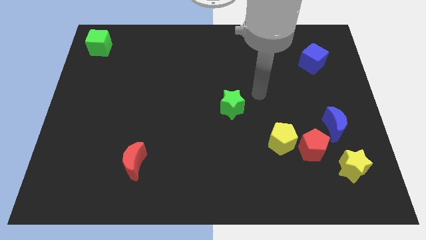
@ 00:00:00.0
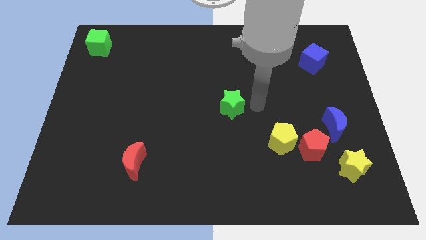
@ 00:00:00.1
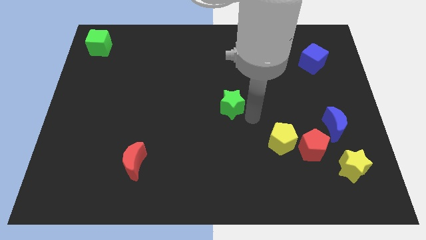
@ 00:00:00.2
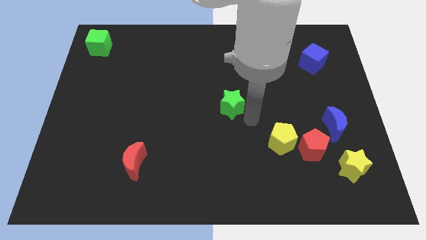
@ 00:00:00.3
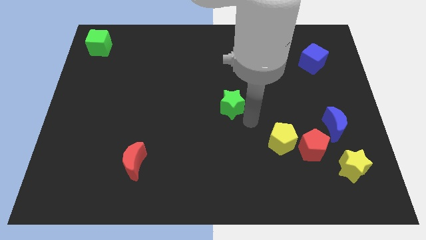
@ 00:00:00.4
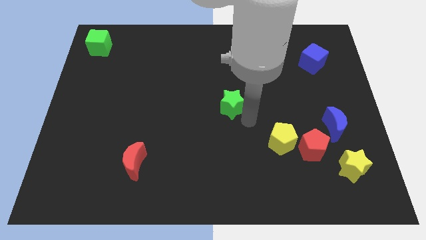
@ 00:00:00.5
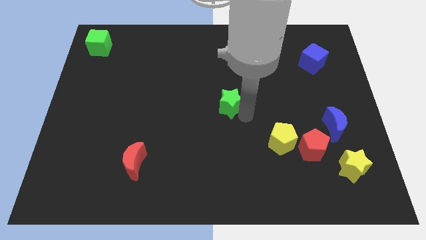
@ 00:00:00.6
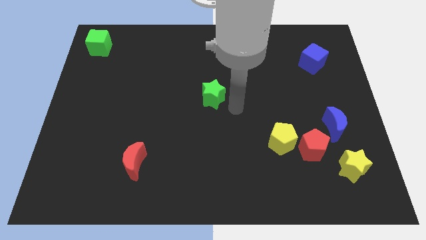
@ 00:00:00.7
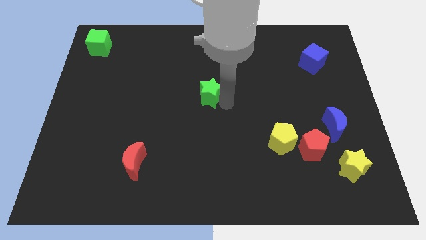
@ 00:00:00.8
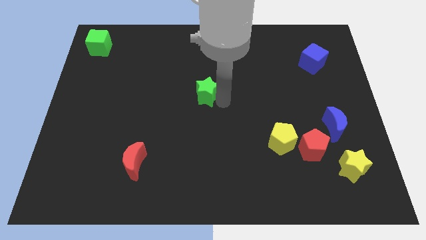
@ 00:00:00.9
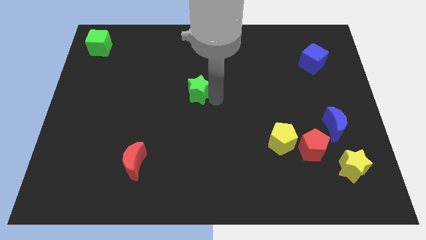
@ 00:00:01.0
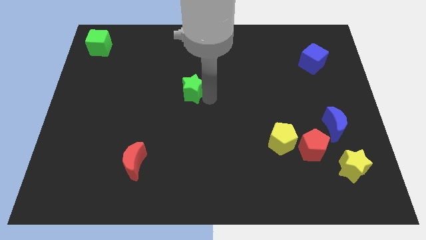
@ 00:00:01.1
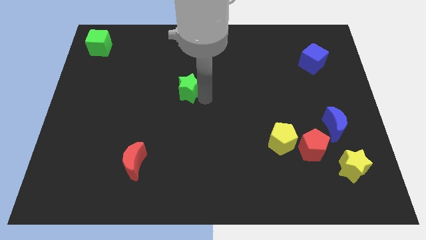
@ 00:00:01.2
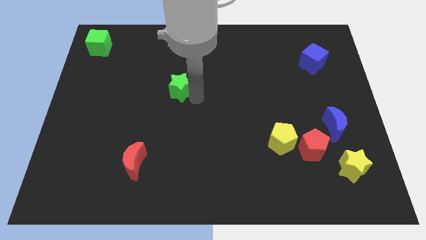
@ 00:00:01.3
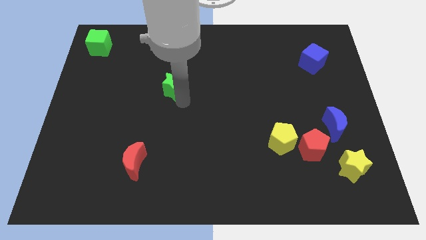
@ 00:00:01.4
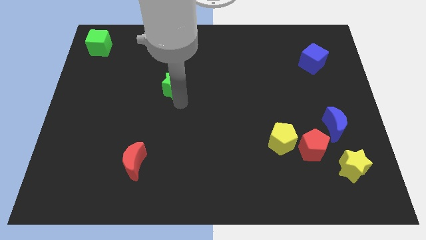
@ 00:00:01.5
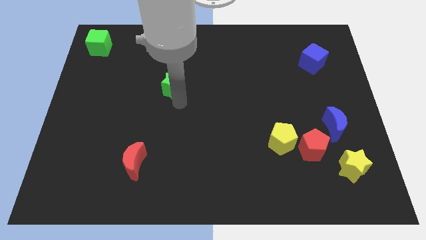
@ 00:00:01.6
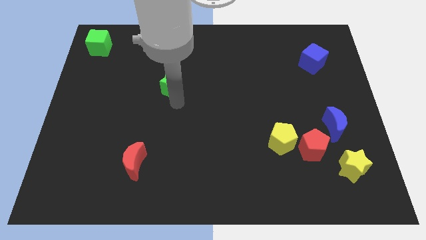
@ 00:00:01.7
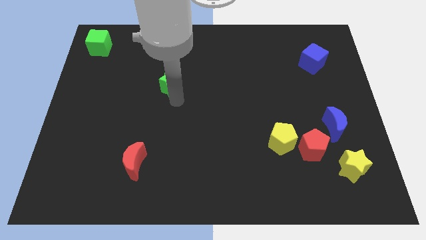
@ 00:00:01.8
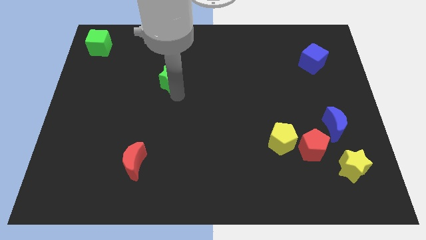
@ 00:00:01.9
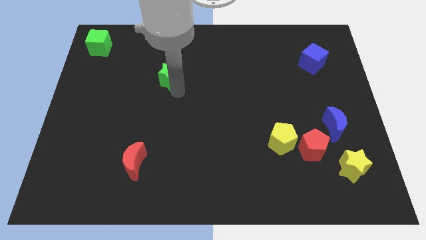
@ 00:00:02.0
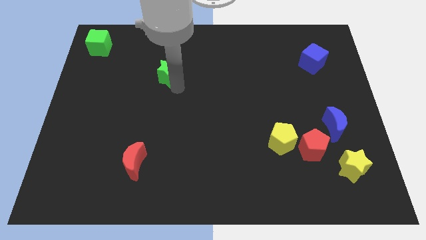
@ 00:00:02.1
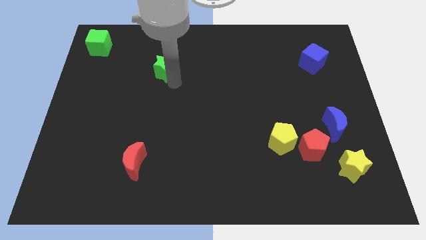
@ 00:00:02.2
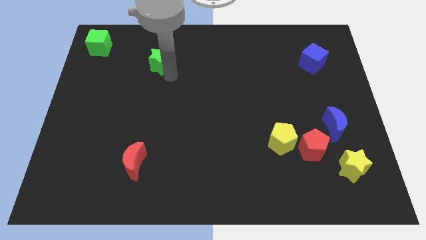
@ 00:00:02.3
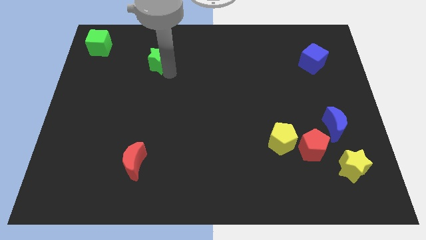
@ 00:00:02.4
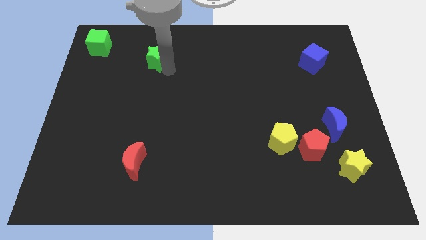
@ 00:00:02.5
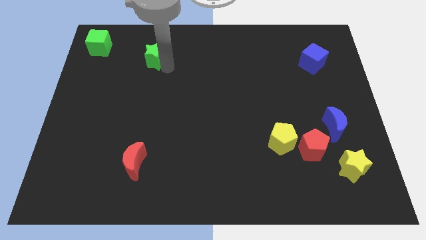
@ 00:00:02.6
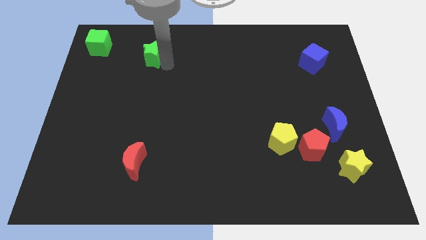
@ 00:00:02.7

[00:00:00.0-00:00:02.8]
slide the green star towards the green cube

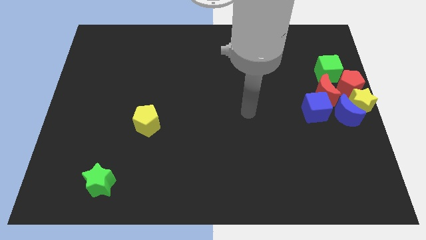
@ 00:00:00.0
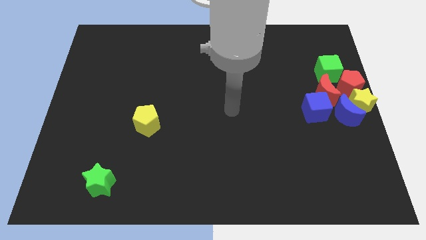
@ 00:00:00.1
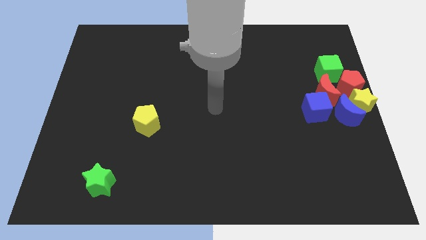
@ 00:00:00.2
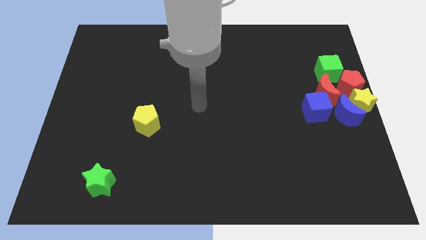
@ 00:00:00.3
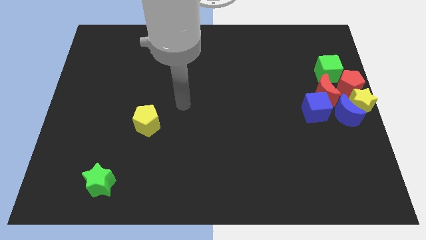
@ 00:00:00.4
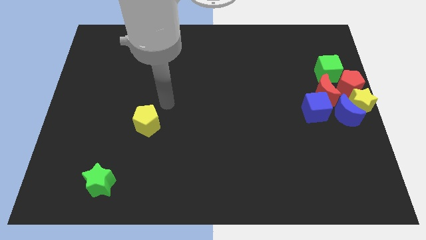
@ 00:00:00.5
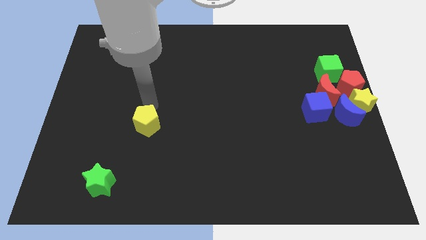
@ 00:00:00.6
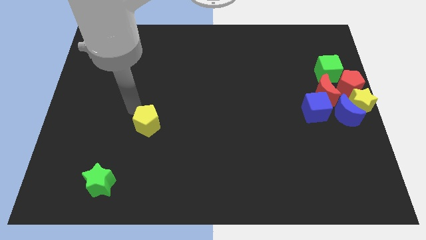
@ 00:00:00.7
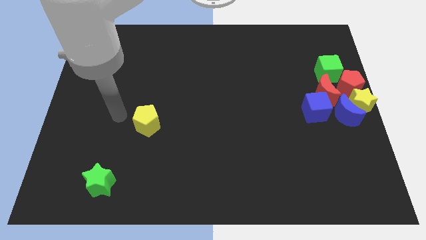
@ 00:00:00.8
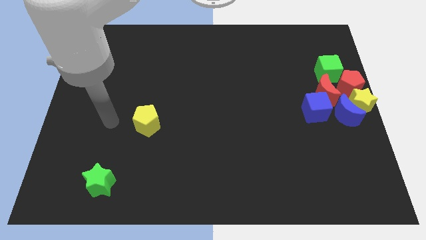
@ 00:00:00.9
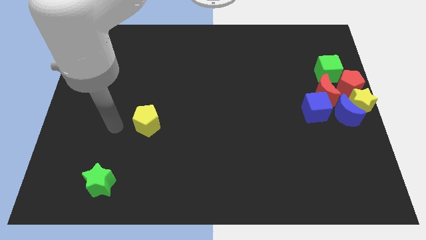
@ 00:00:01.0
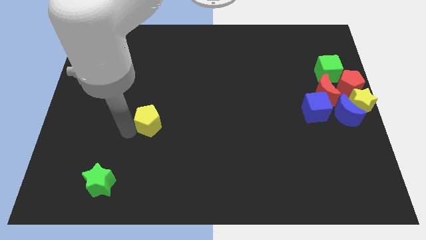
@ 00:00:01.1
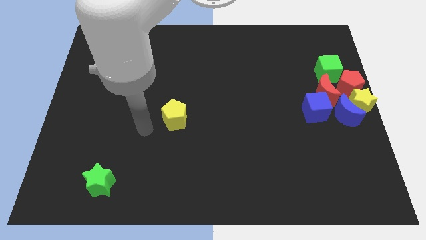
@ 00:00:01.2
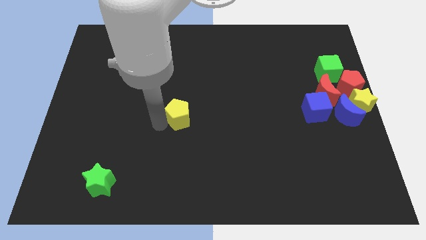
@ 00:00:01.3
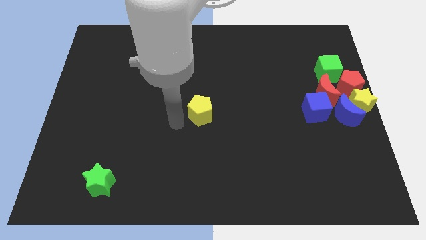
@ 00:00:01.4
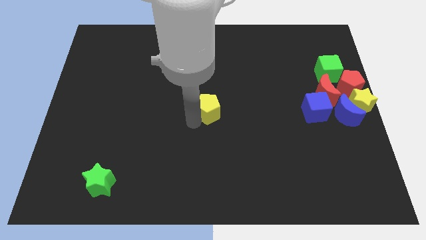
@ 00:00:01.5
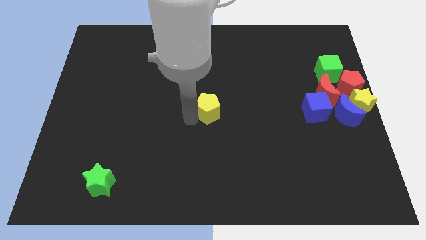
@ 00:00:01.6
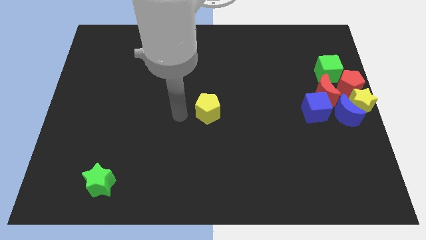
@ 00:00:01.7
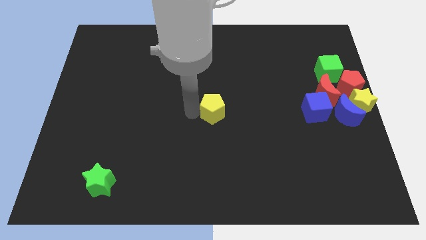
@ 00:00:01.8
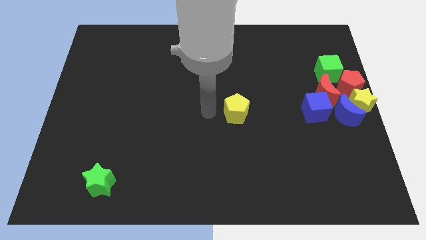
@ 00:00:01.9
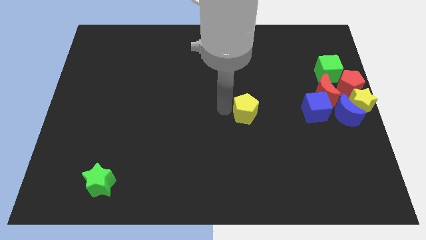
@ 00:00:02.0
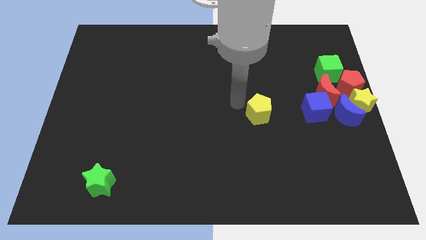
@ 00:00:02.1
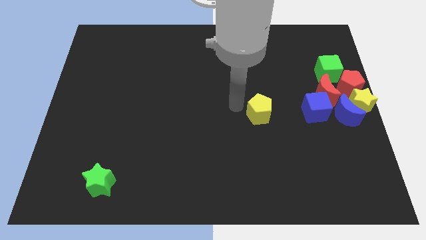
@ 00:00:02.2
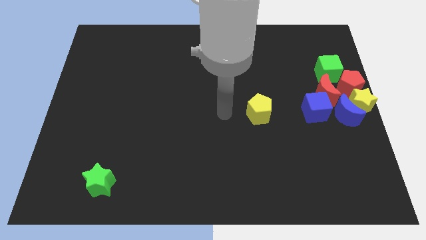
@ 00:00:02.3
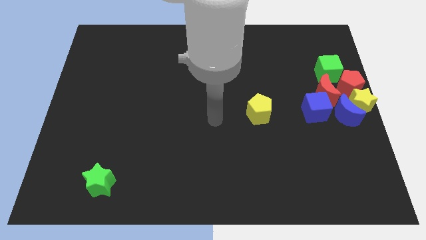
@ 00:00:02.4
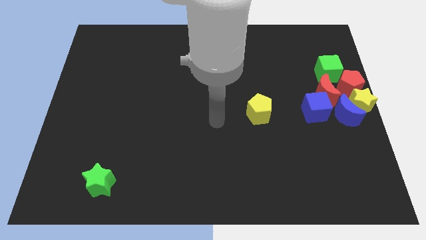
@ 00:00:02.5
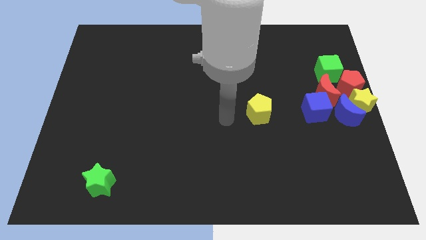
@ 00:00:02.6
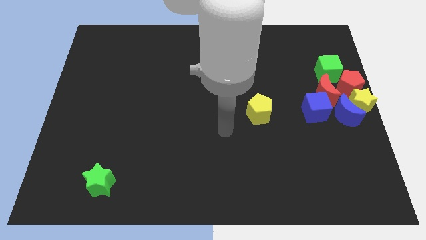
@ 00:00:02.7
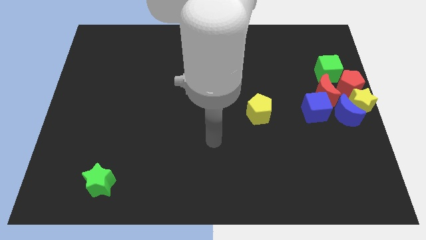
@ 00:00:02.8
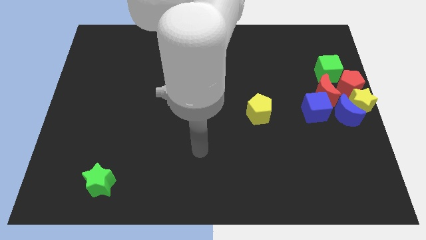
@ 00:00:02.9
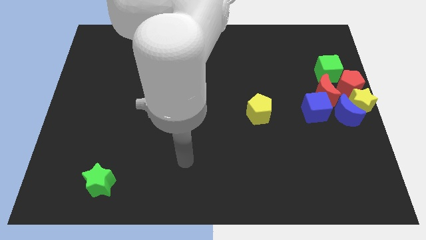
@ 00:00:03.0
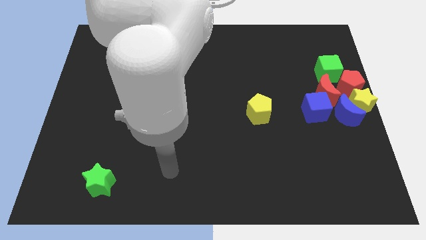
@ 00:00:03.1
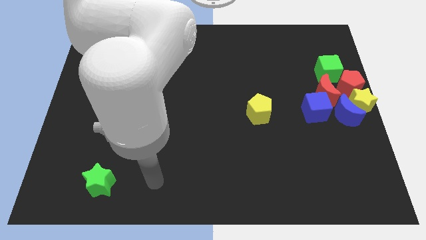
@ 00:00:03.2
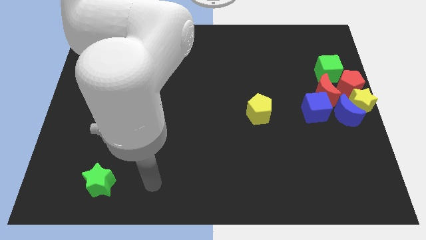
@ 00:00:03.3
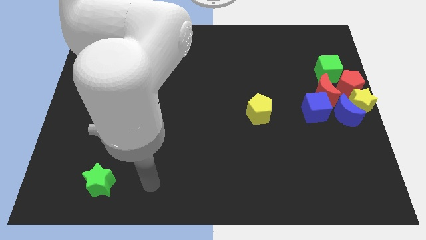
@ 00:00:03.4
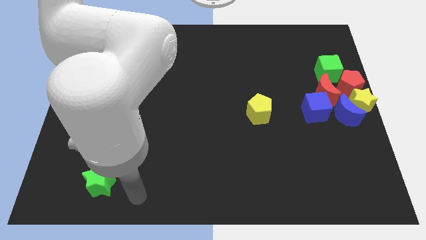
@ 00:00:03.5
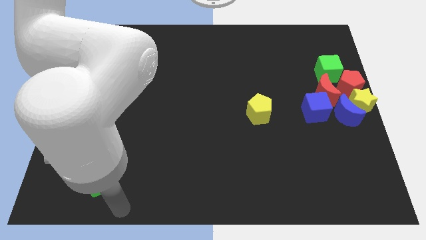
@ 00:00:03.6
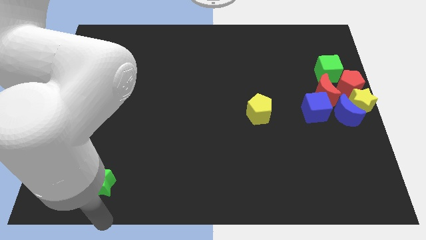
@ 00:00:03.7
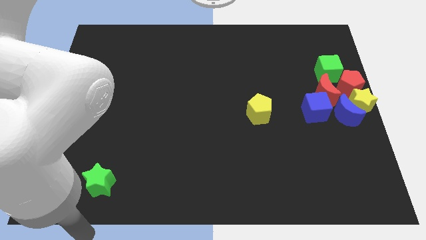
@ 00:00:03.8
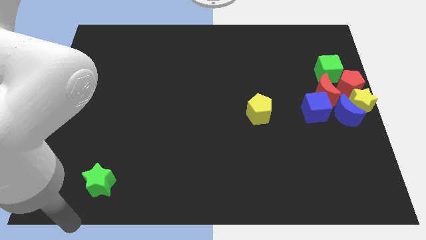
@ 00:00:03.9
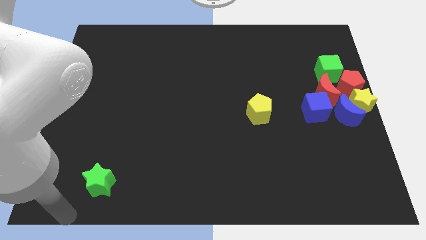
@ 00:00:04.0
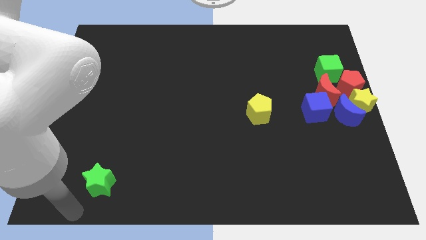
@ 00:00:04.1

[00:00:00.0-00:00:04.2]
move the yellow pentagon left to the blue cube

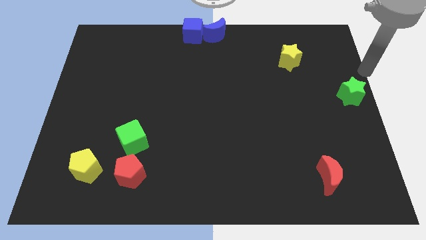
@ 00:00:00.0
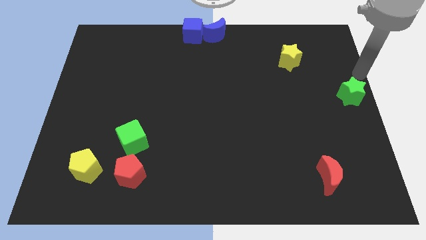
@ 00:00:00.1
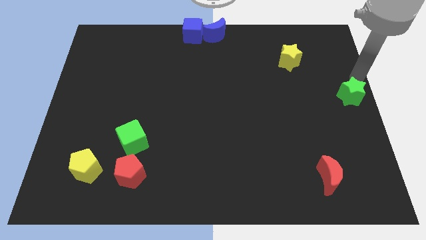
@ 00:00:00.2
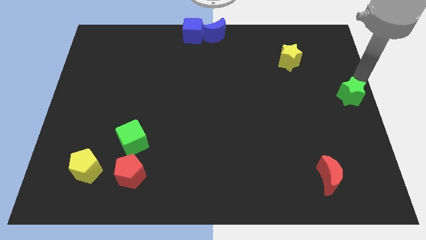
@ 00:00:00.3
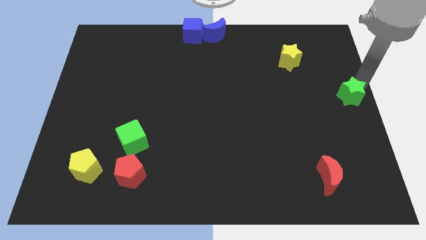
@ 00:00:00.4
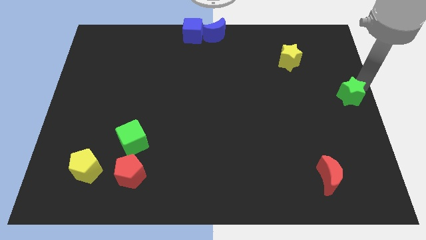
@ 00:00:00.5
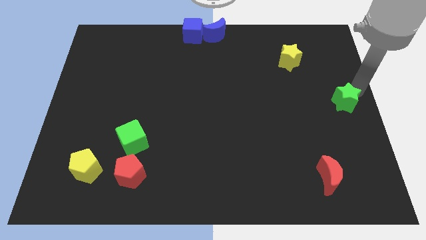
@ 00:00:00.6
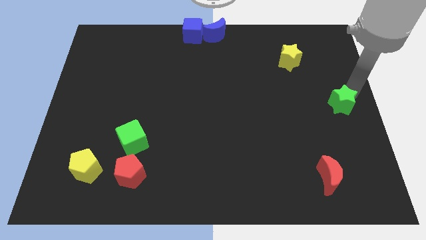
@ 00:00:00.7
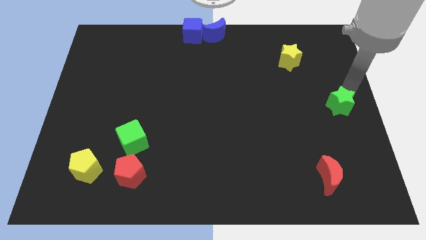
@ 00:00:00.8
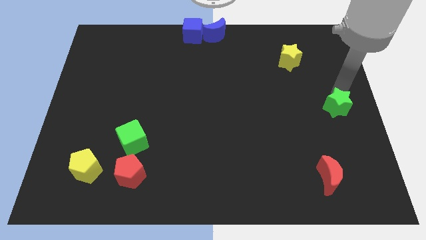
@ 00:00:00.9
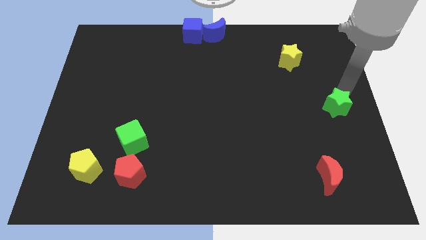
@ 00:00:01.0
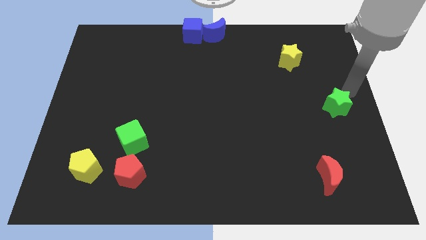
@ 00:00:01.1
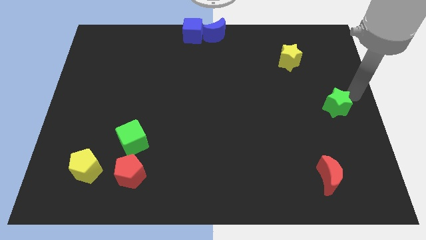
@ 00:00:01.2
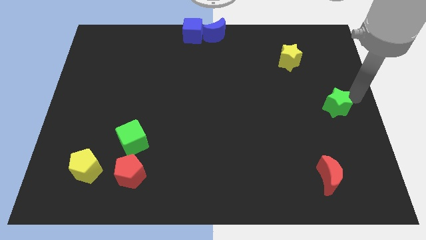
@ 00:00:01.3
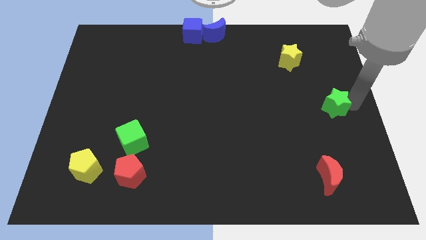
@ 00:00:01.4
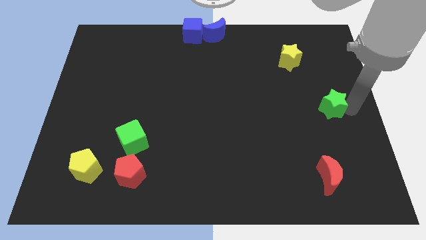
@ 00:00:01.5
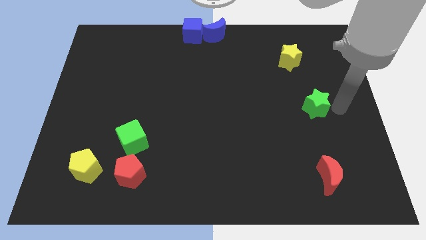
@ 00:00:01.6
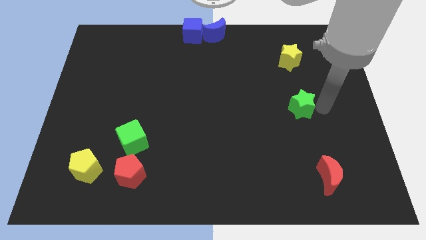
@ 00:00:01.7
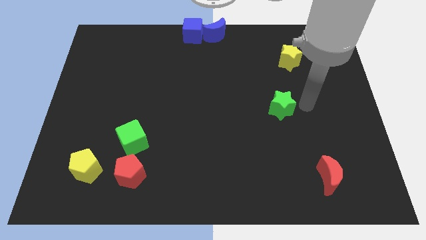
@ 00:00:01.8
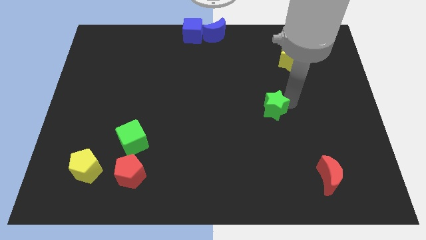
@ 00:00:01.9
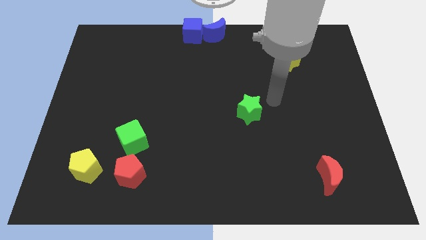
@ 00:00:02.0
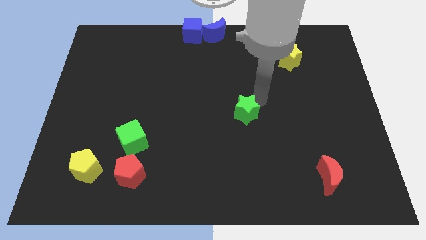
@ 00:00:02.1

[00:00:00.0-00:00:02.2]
place green star below yellow star
